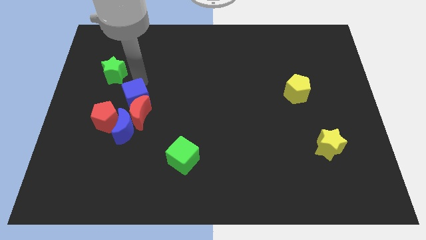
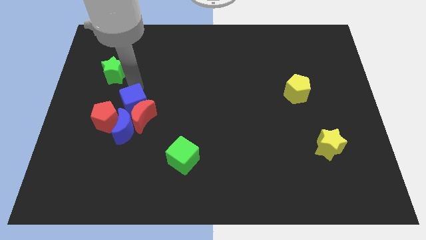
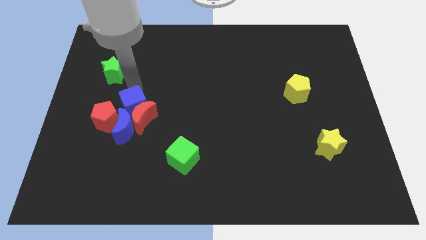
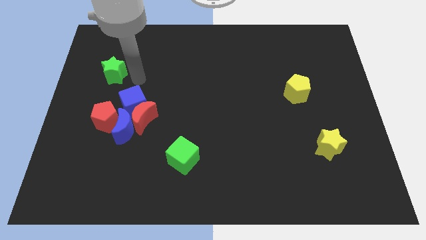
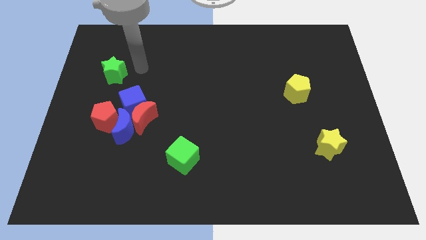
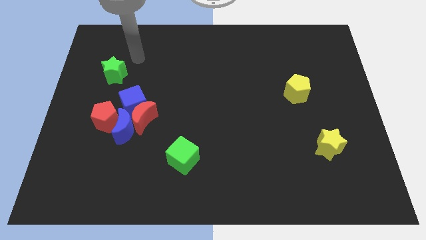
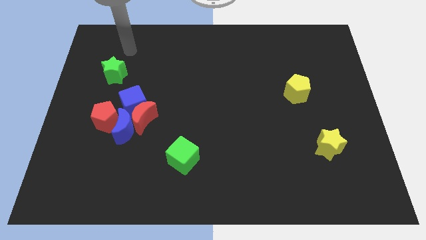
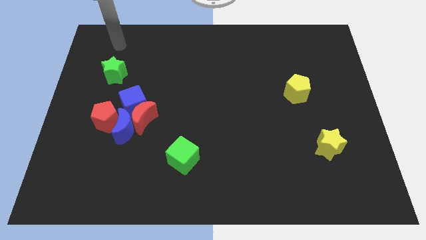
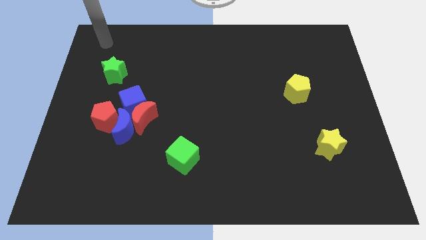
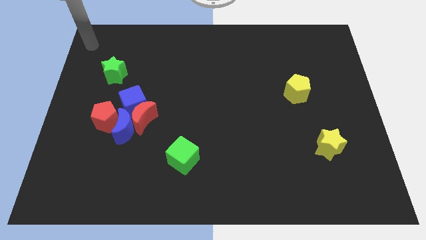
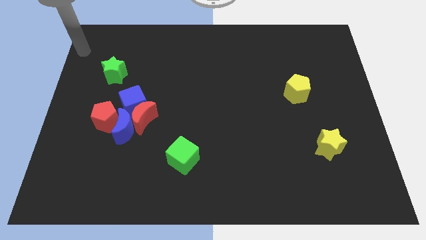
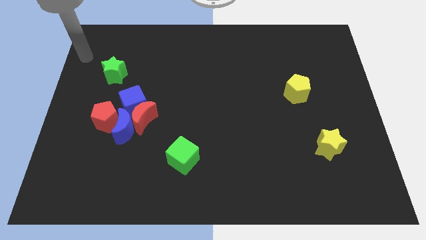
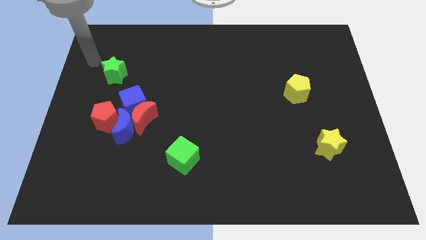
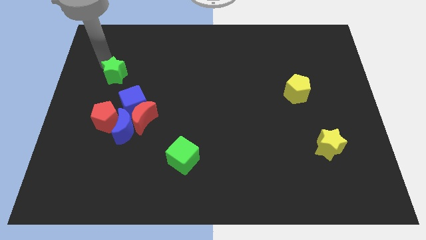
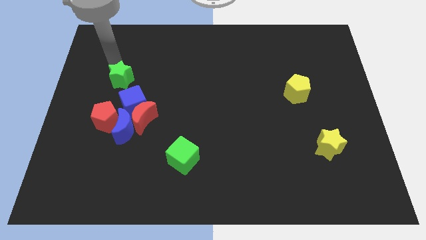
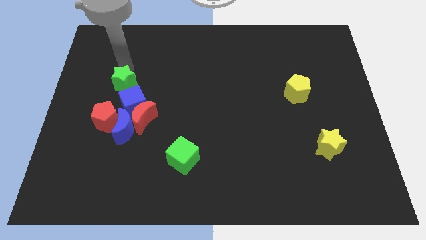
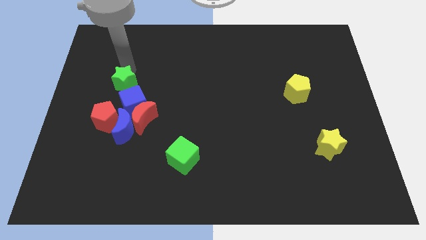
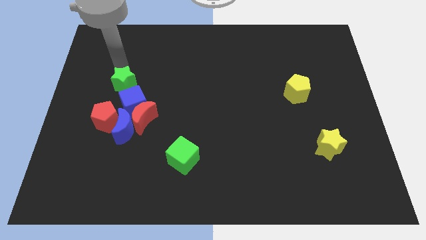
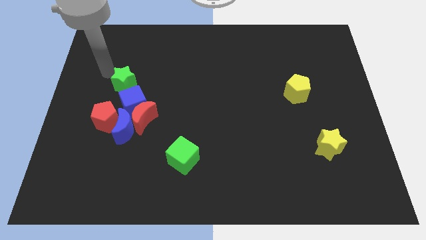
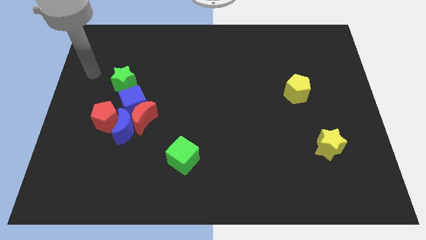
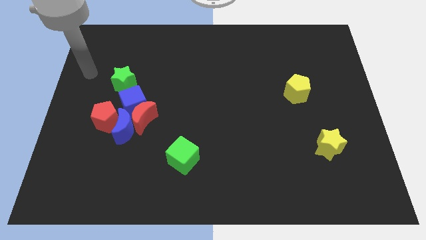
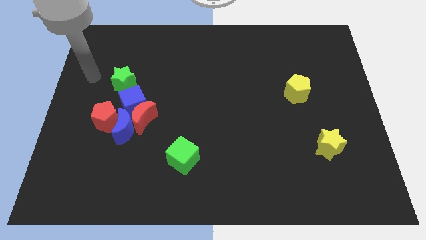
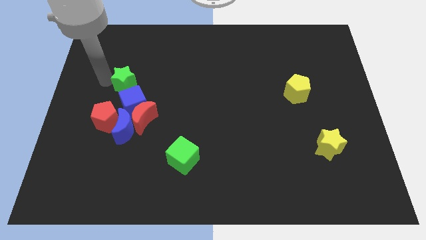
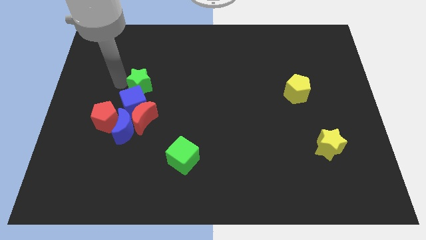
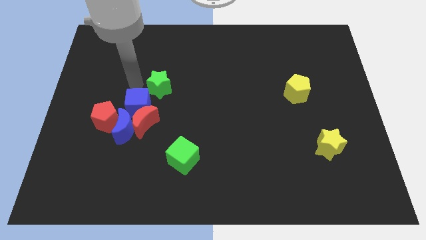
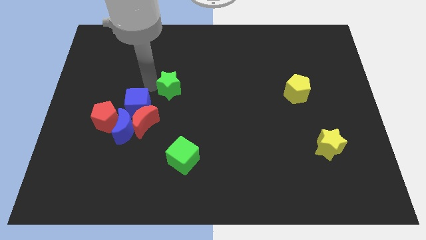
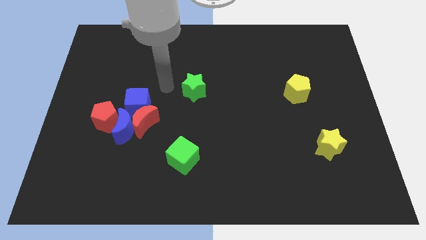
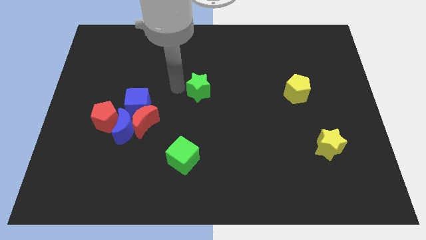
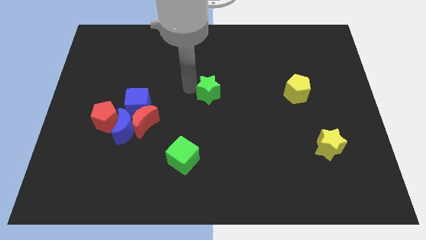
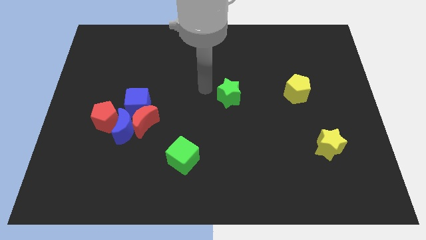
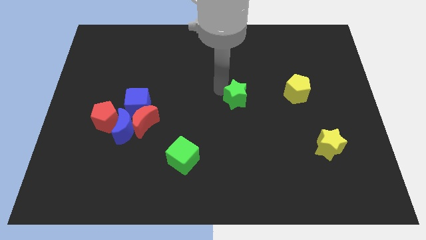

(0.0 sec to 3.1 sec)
place the green star in between the yellow pentagon and blue cube

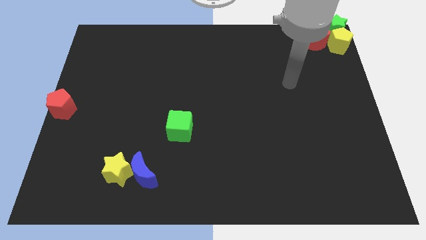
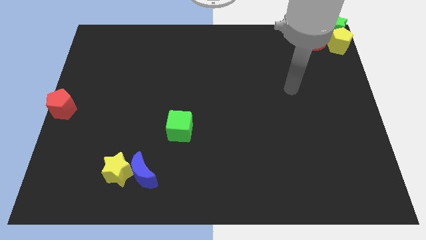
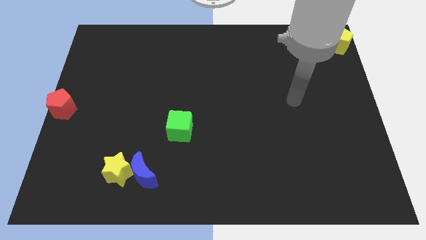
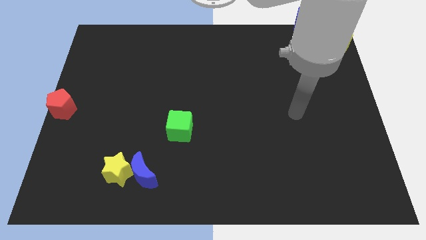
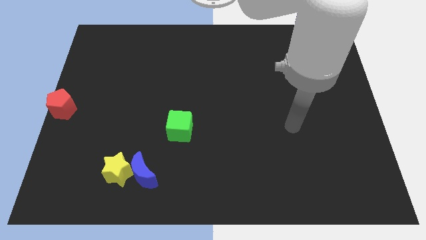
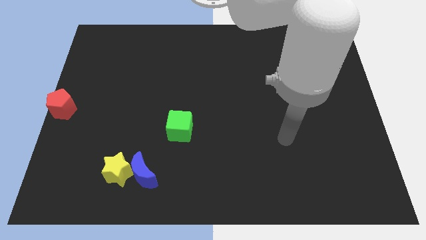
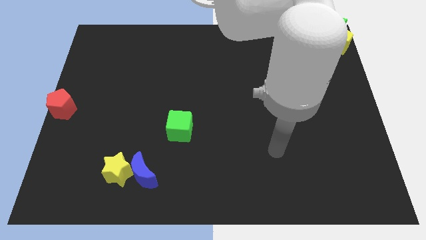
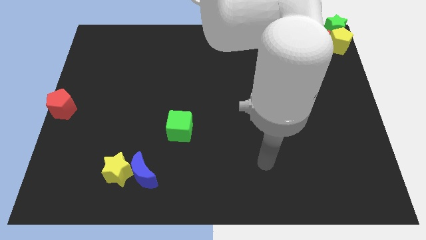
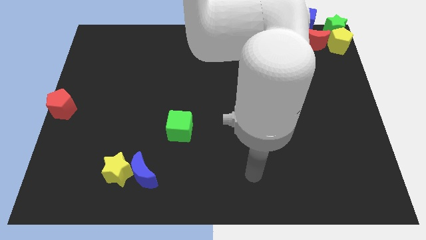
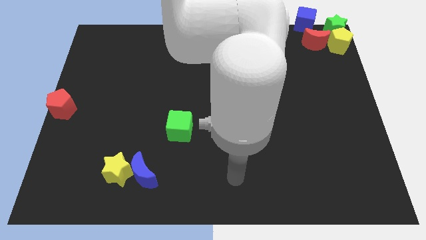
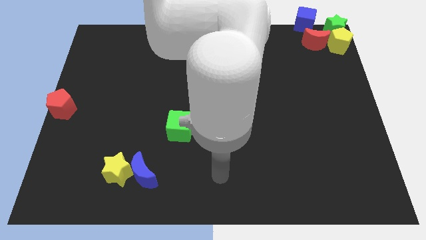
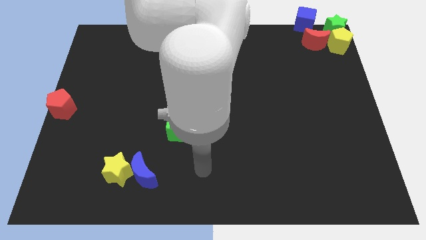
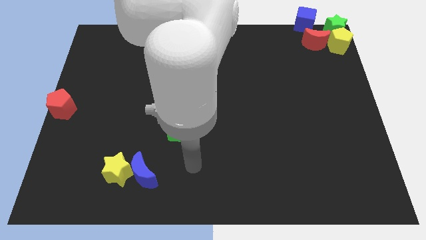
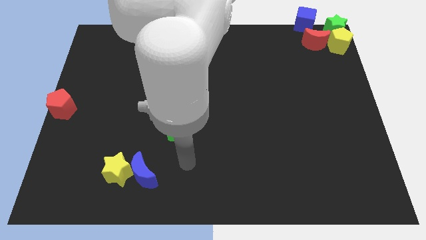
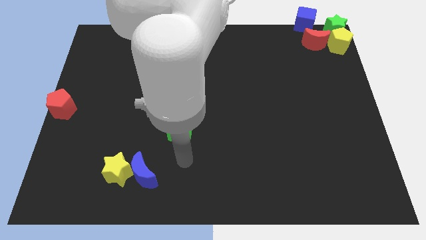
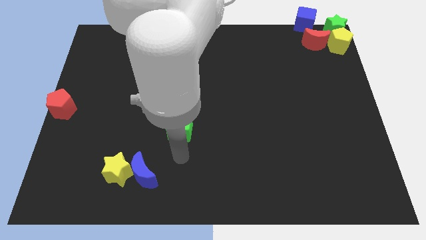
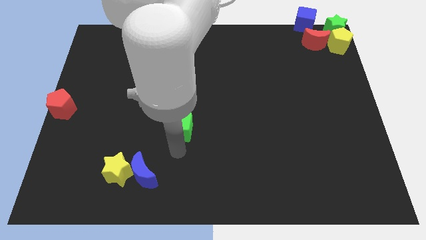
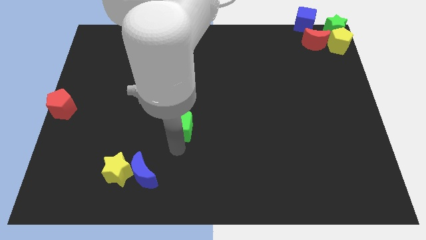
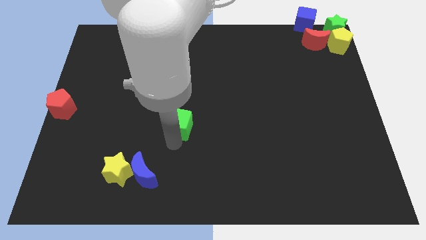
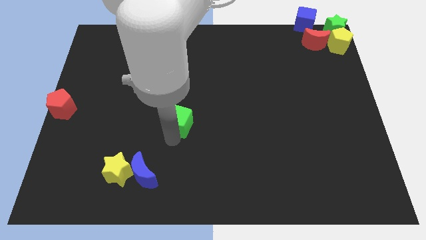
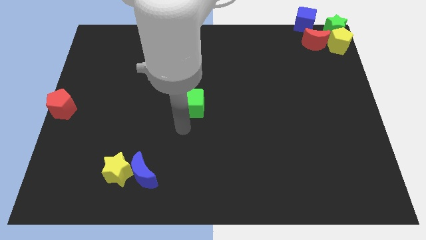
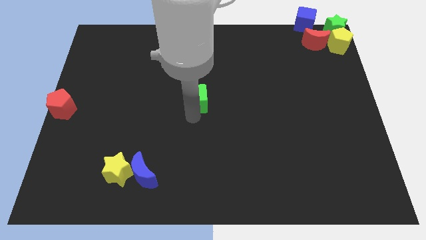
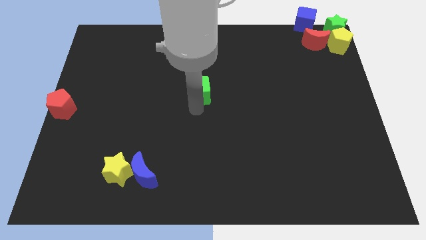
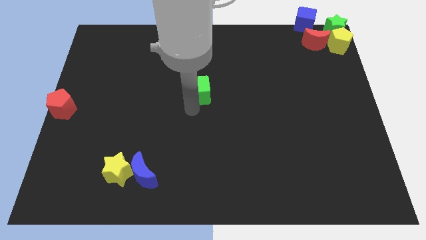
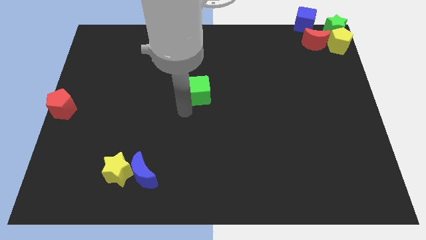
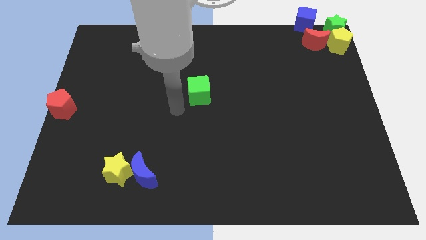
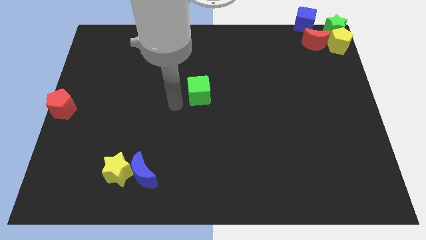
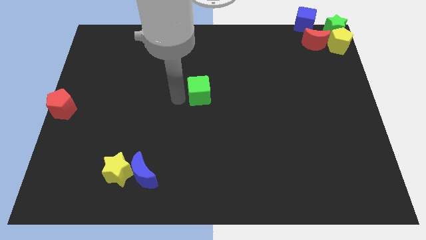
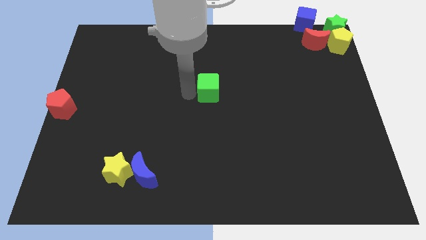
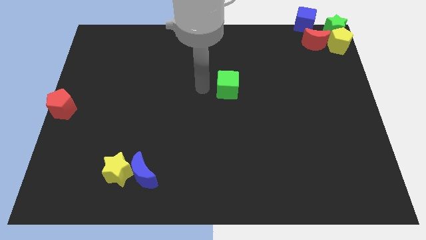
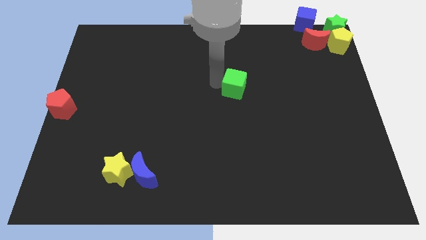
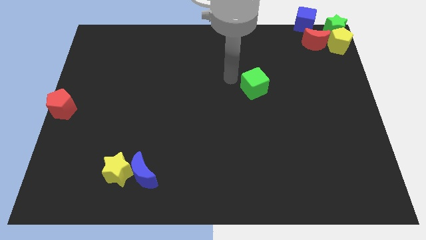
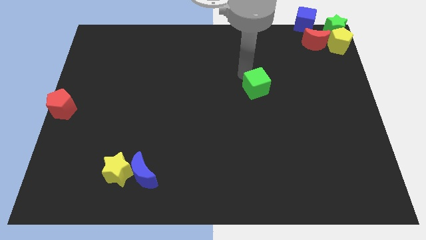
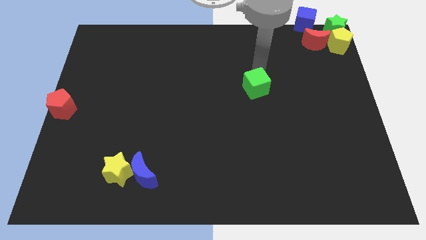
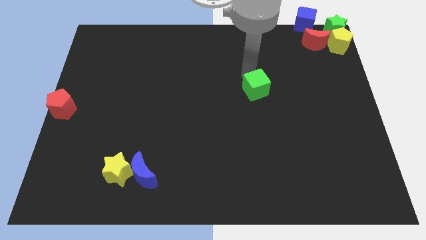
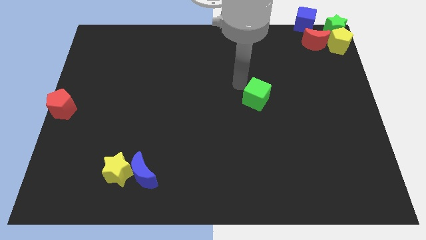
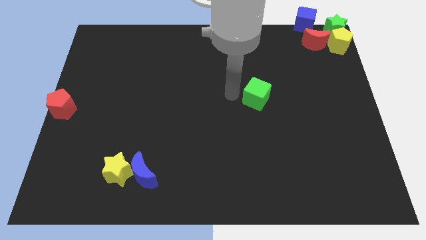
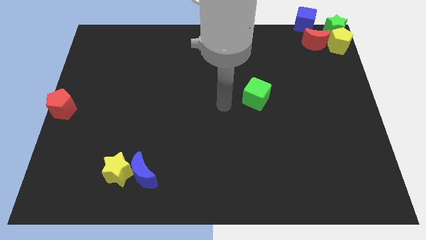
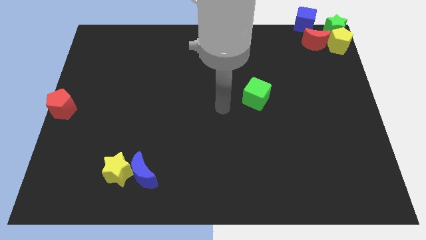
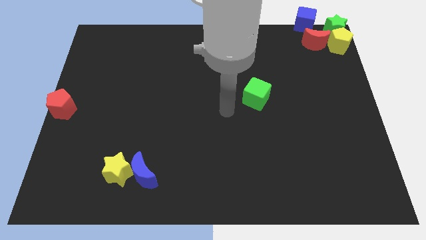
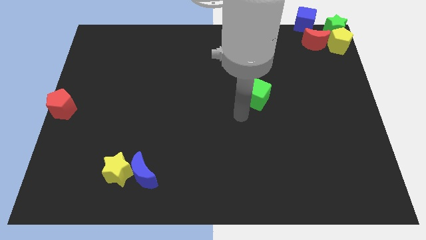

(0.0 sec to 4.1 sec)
push the green cube towards the right side of the board

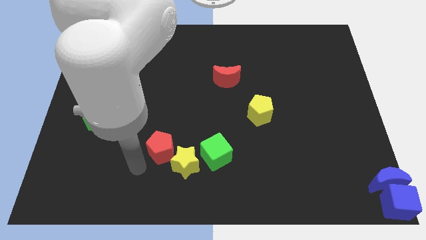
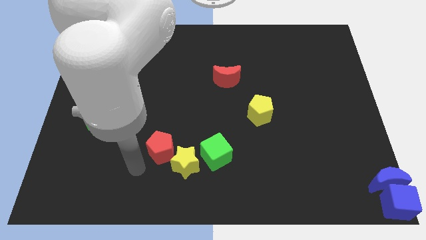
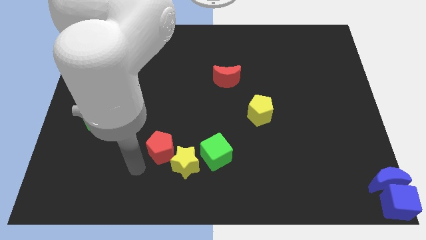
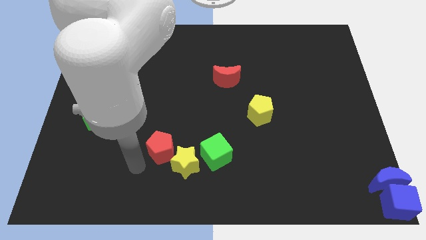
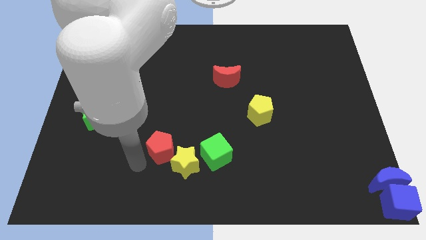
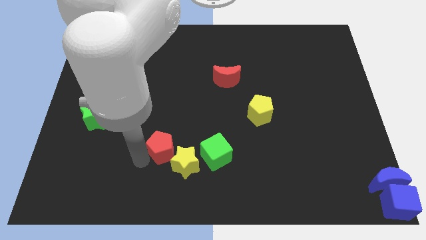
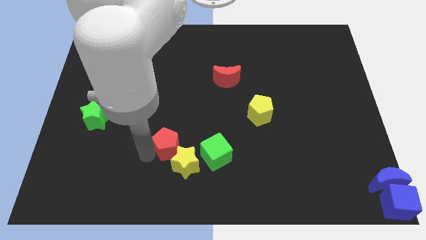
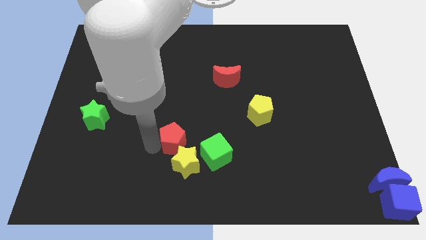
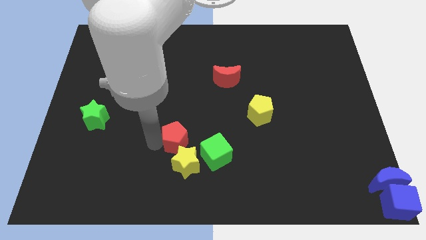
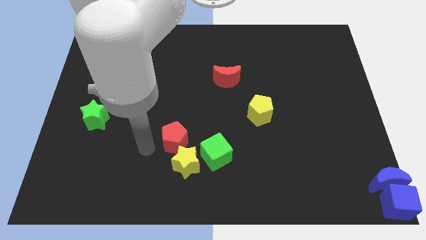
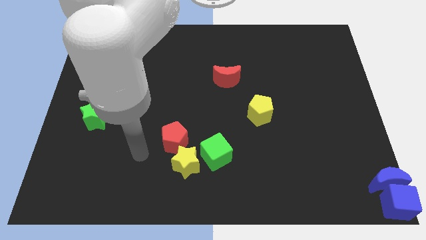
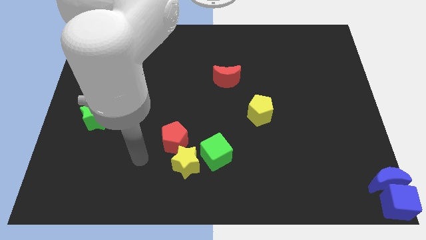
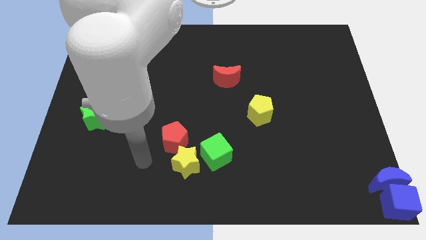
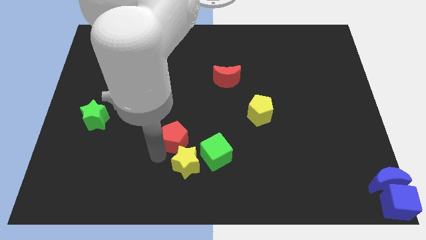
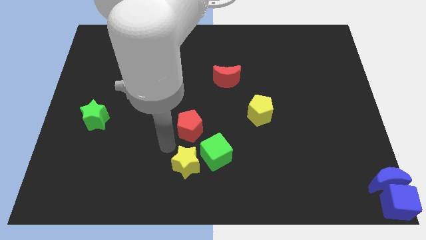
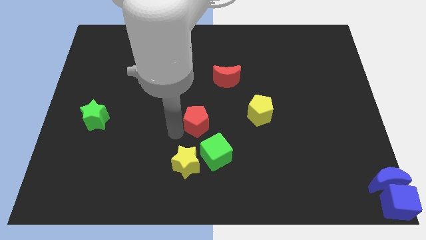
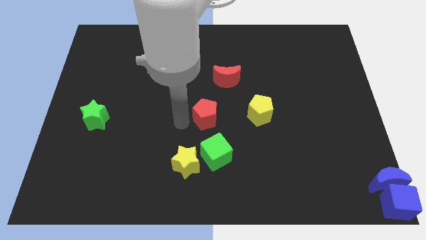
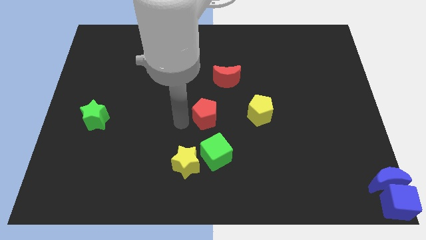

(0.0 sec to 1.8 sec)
place the red pentagon between green cube and red moon

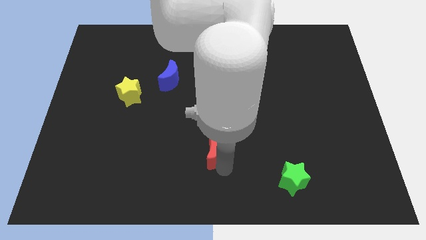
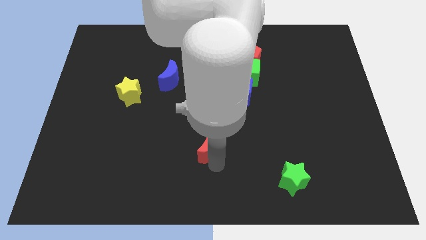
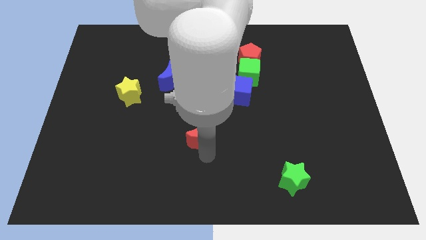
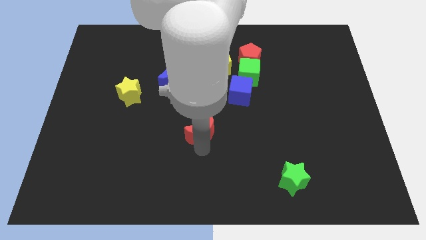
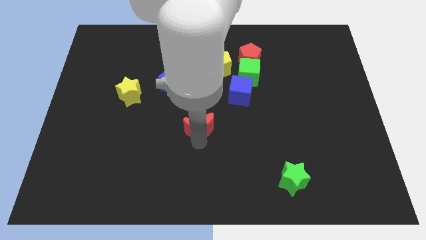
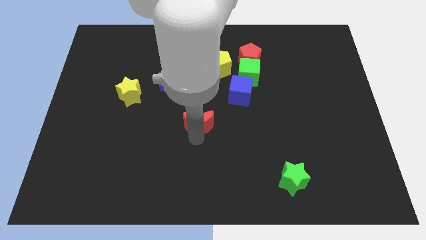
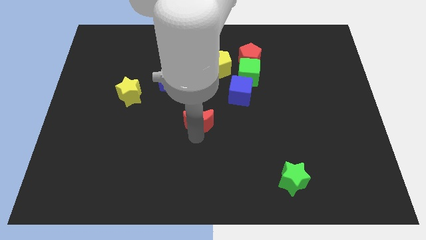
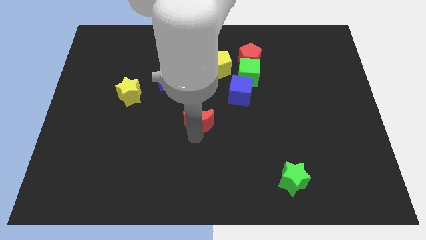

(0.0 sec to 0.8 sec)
place the red moon digaonally to the blue cube
